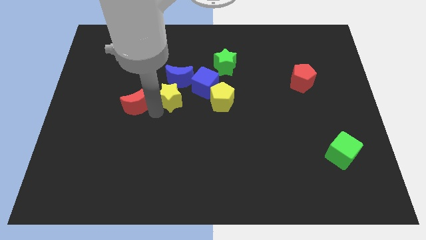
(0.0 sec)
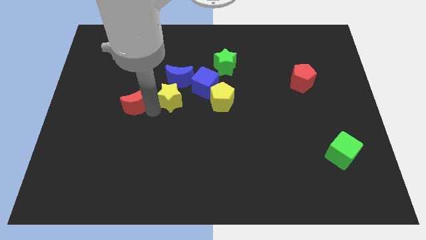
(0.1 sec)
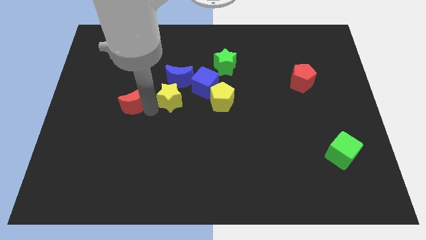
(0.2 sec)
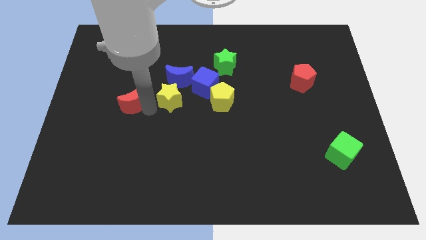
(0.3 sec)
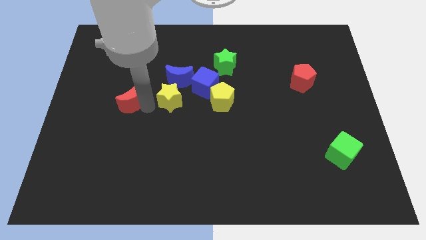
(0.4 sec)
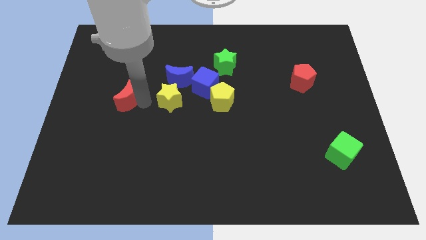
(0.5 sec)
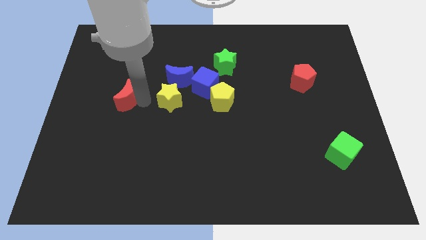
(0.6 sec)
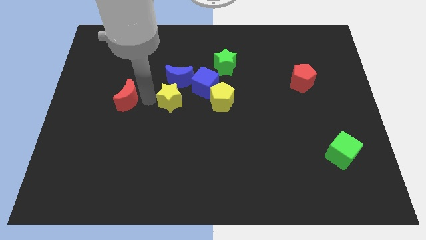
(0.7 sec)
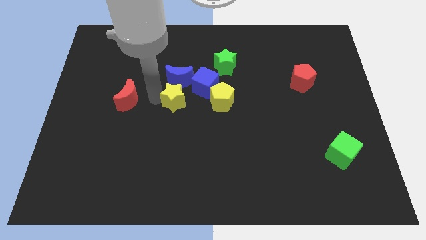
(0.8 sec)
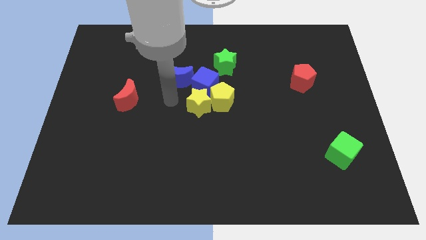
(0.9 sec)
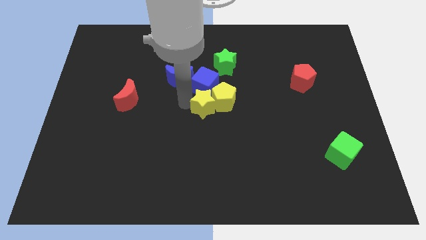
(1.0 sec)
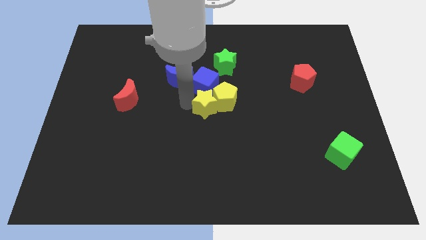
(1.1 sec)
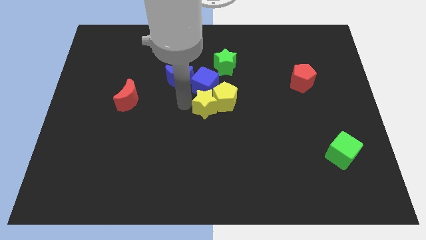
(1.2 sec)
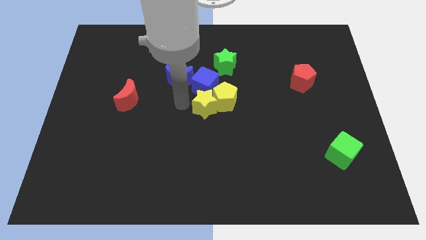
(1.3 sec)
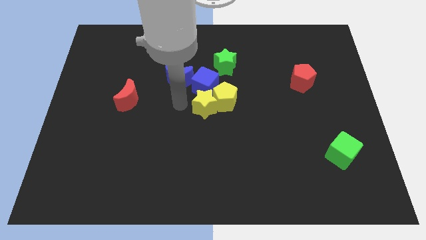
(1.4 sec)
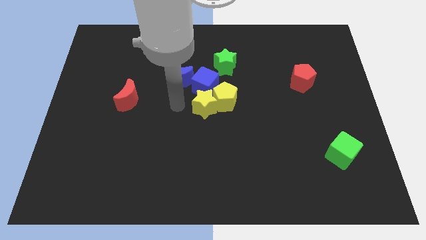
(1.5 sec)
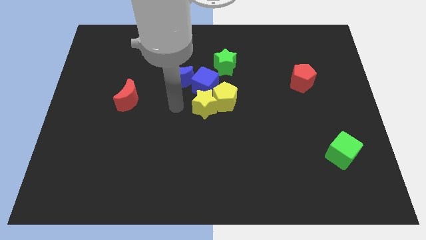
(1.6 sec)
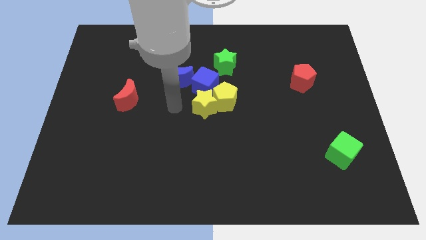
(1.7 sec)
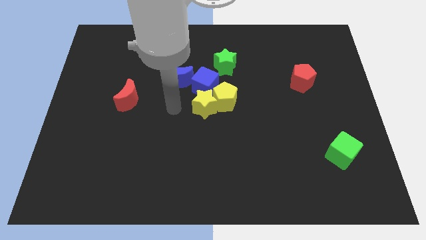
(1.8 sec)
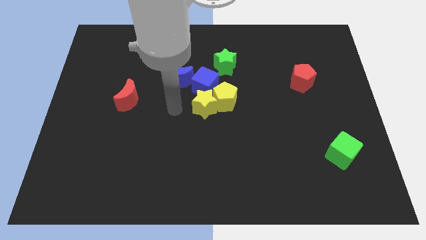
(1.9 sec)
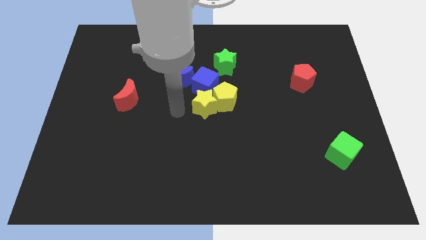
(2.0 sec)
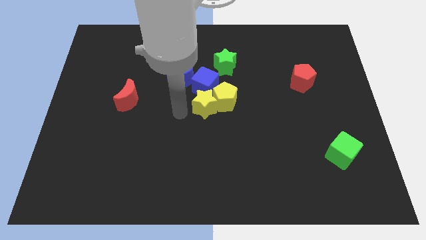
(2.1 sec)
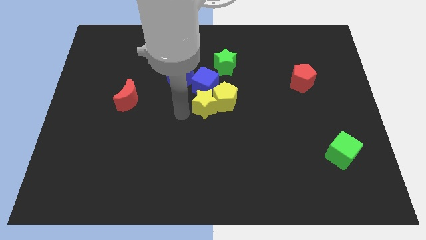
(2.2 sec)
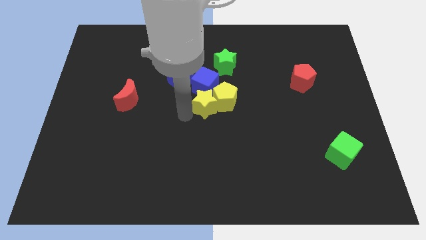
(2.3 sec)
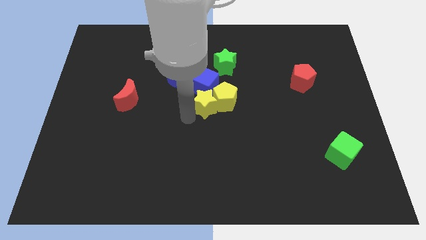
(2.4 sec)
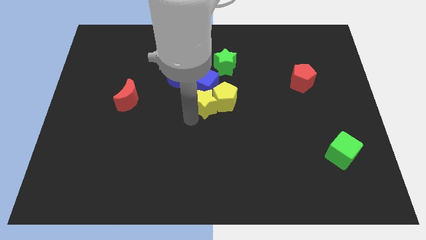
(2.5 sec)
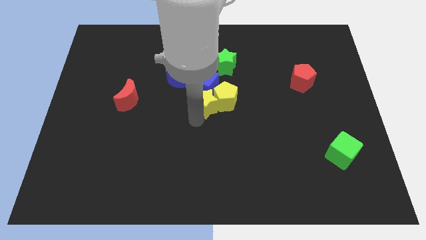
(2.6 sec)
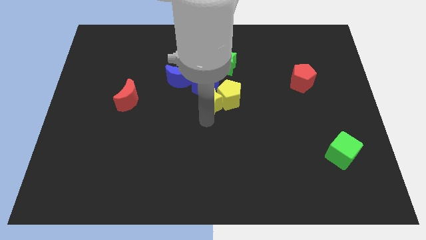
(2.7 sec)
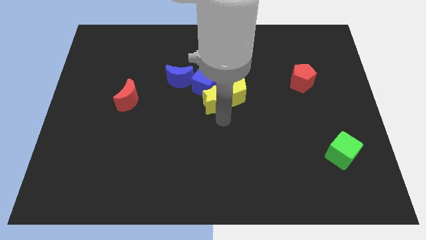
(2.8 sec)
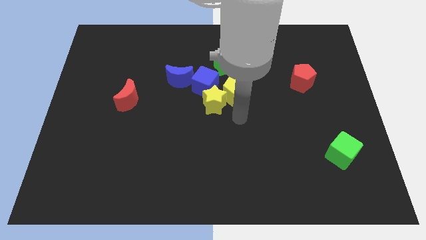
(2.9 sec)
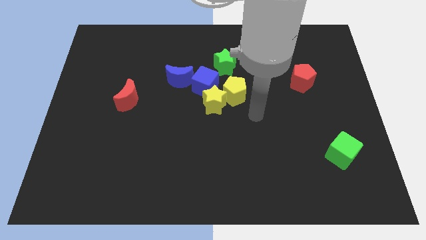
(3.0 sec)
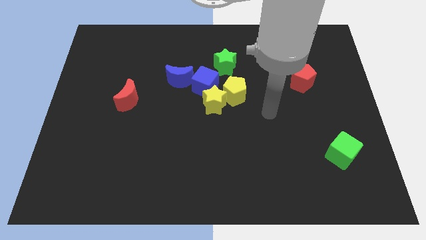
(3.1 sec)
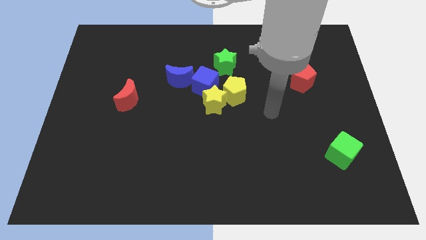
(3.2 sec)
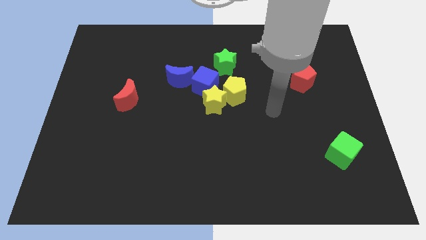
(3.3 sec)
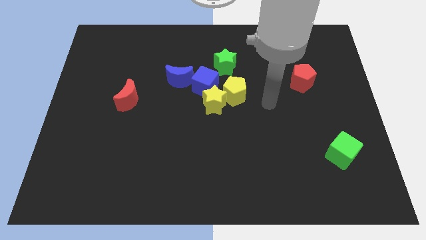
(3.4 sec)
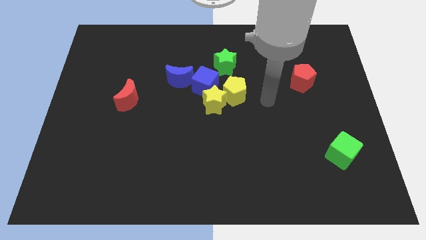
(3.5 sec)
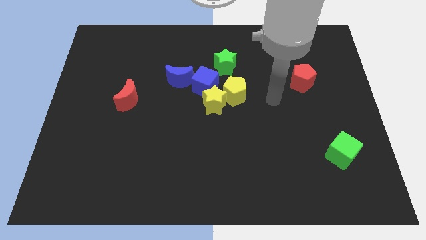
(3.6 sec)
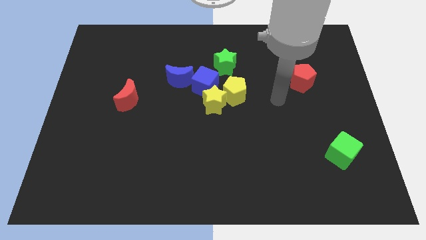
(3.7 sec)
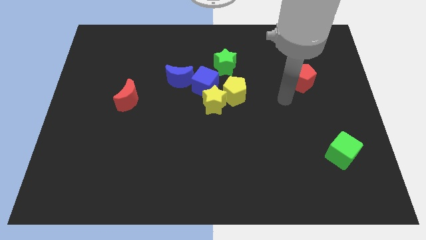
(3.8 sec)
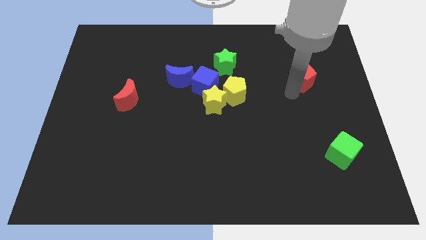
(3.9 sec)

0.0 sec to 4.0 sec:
push yellow star close to yellow pentagon

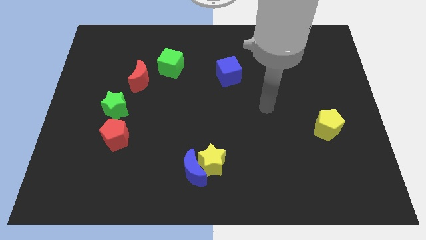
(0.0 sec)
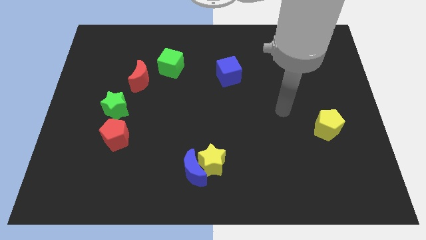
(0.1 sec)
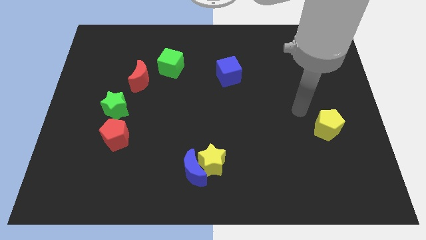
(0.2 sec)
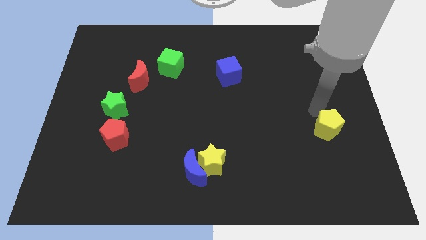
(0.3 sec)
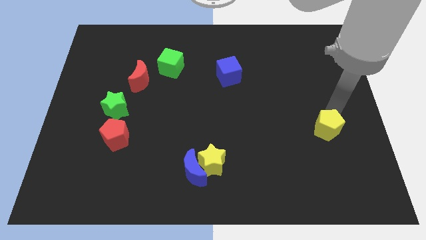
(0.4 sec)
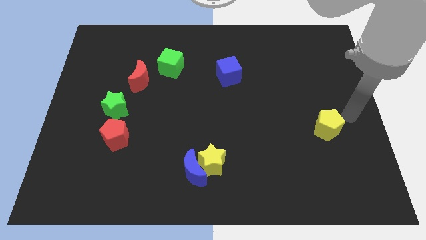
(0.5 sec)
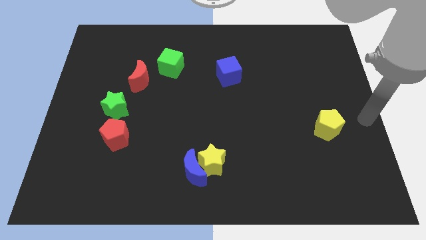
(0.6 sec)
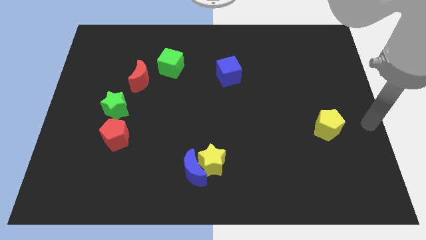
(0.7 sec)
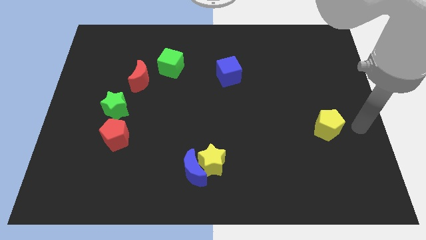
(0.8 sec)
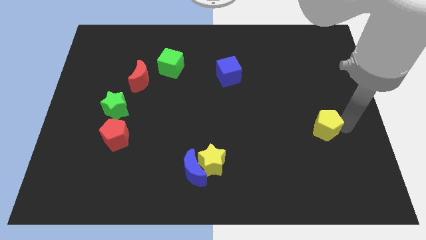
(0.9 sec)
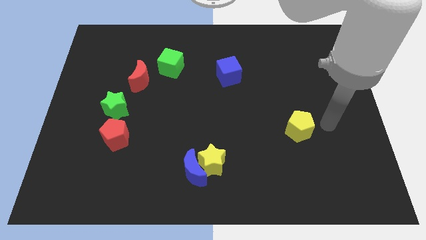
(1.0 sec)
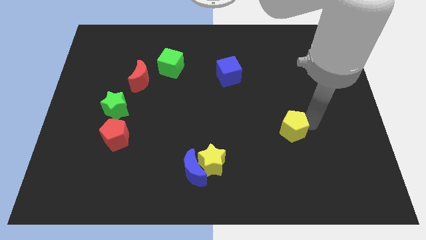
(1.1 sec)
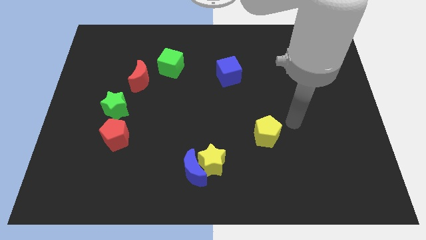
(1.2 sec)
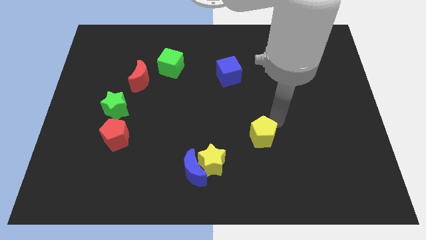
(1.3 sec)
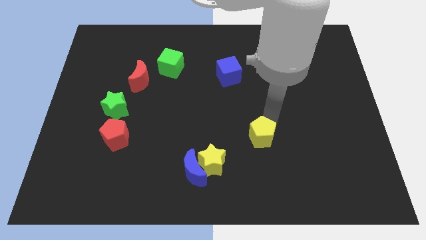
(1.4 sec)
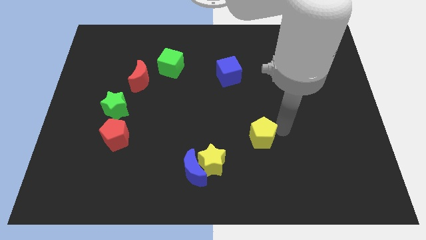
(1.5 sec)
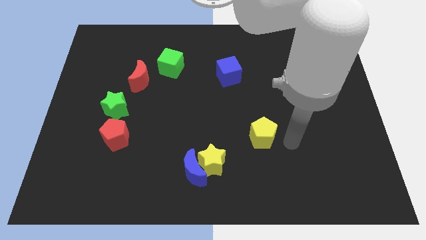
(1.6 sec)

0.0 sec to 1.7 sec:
place the yellow pentagon diagonally at the top right of the yellow star

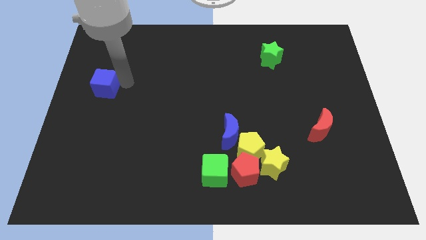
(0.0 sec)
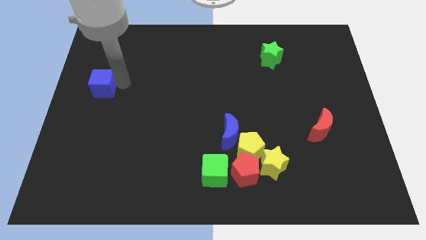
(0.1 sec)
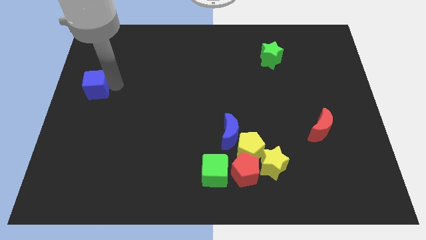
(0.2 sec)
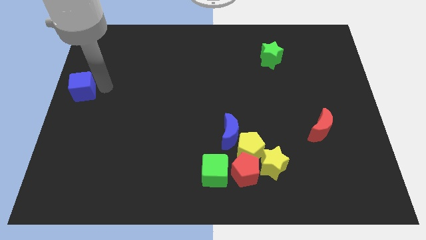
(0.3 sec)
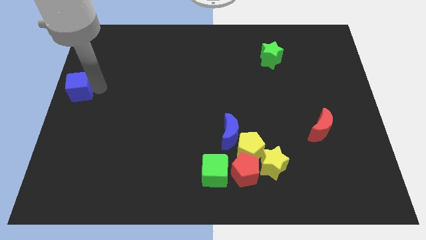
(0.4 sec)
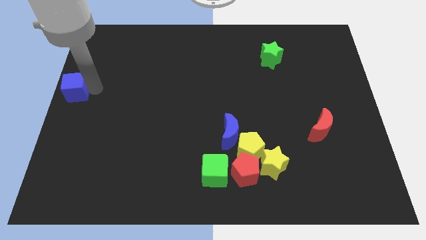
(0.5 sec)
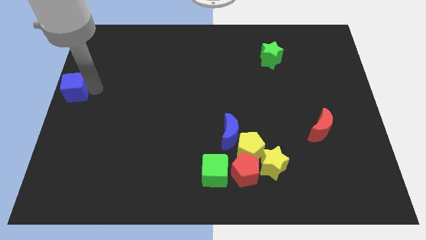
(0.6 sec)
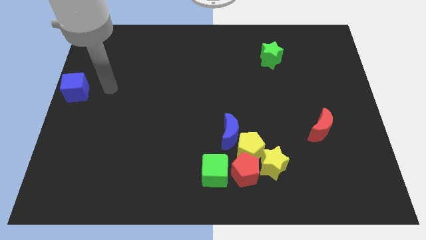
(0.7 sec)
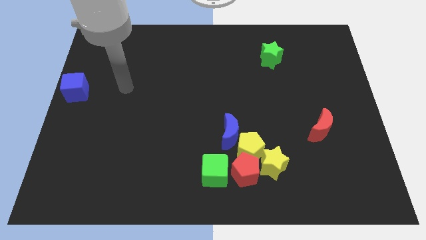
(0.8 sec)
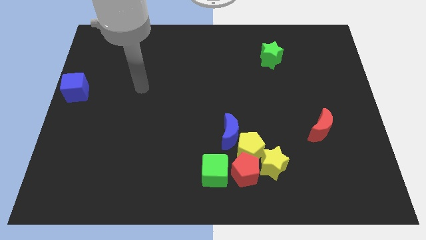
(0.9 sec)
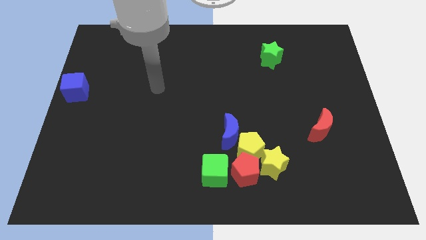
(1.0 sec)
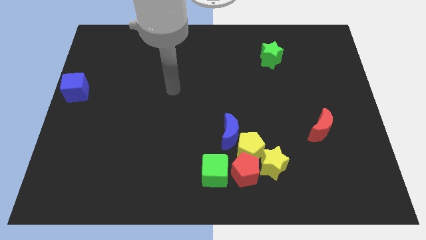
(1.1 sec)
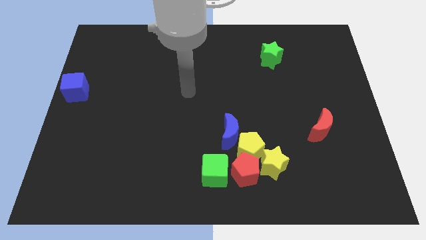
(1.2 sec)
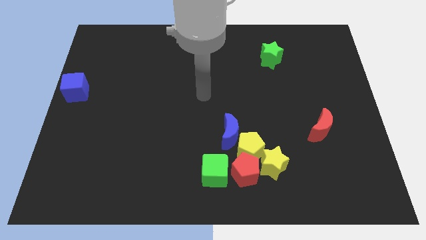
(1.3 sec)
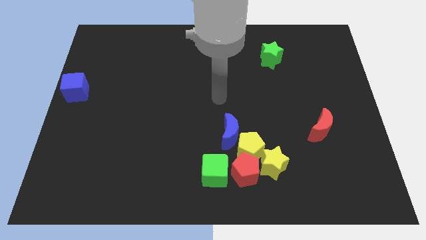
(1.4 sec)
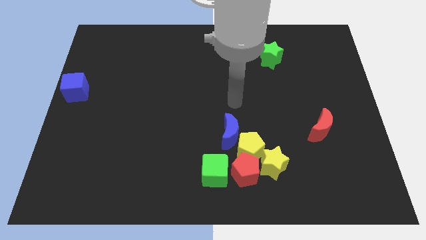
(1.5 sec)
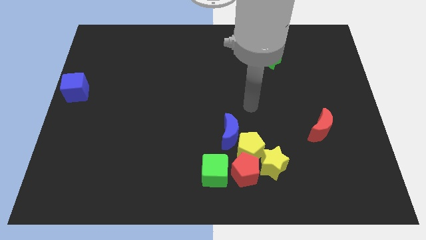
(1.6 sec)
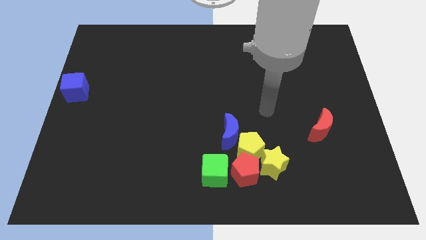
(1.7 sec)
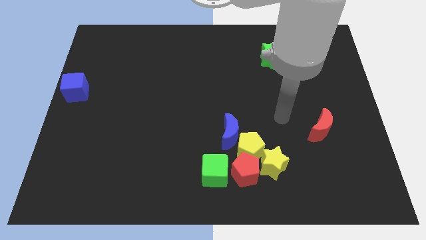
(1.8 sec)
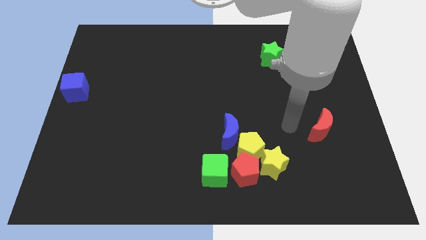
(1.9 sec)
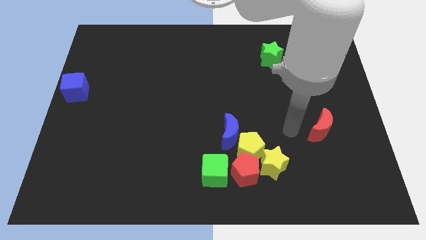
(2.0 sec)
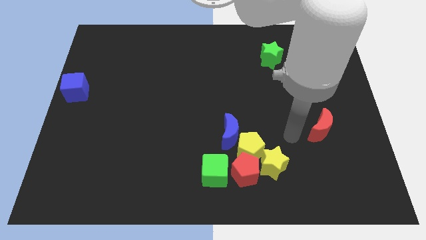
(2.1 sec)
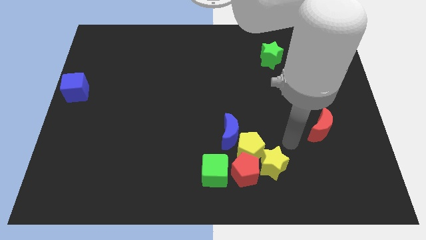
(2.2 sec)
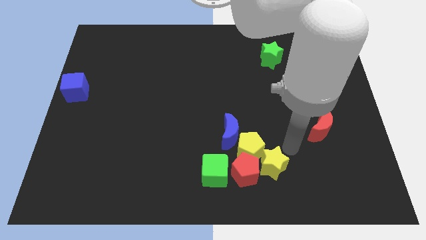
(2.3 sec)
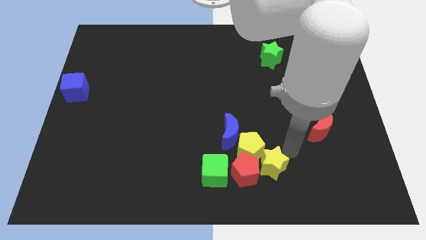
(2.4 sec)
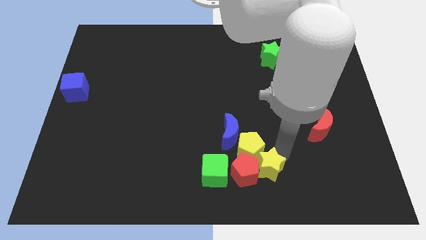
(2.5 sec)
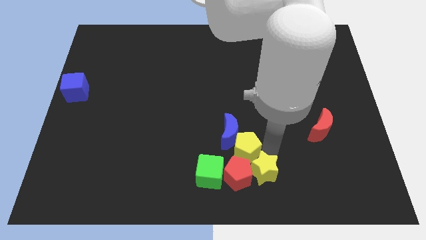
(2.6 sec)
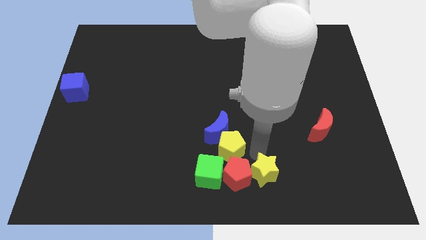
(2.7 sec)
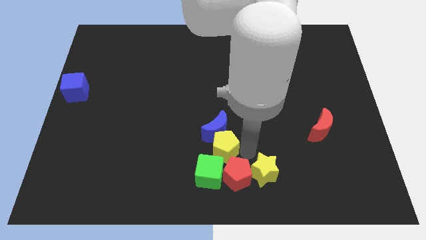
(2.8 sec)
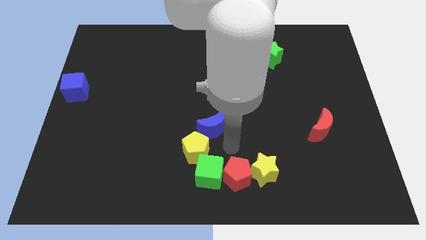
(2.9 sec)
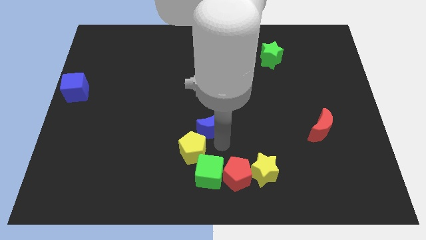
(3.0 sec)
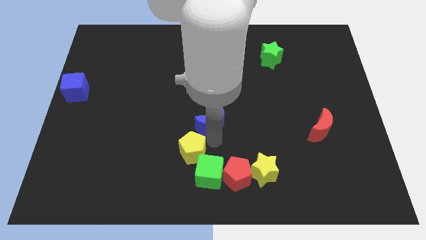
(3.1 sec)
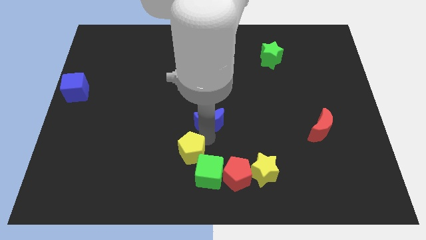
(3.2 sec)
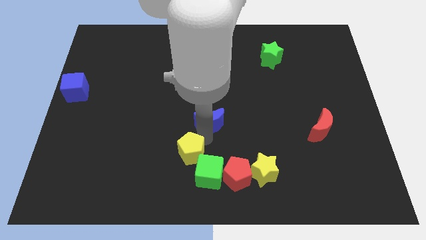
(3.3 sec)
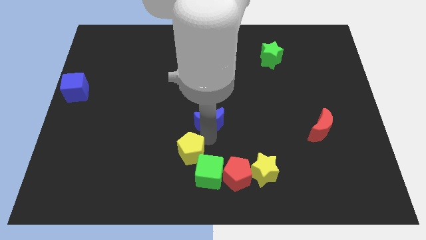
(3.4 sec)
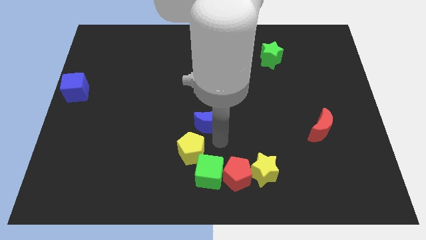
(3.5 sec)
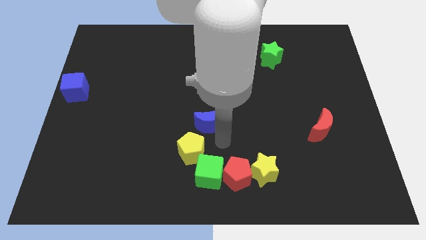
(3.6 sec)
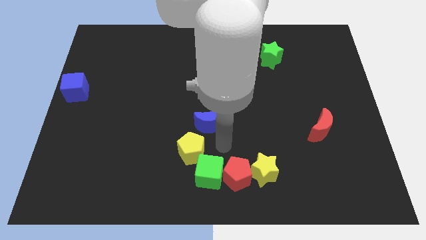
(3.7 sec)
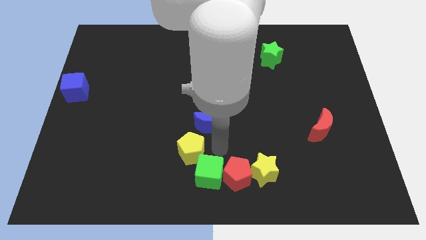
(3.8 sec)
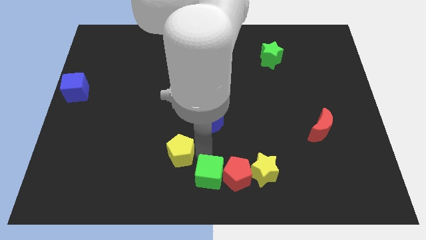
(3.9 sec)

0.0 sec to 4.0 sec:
separate yellow pentagon from the blue moon
